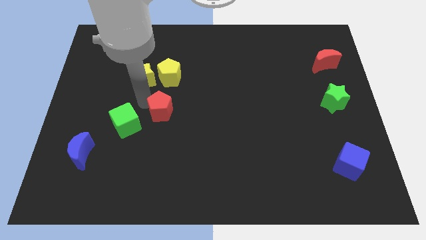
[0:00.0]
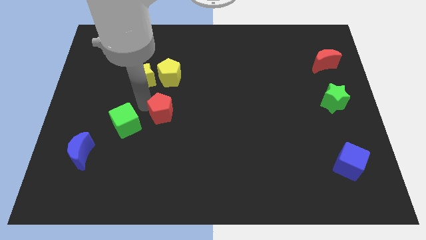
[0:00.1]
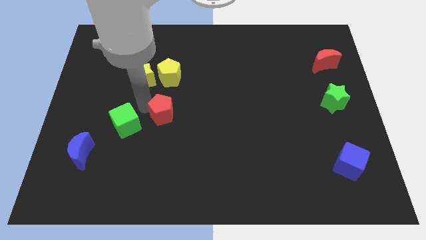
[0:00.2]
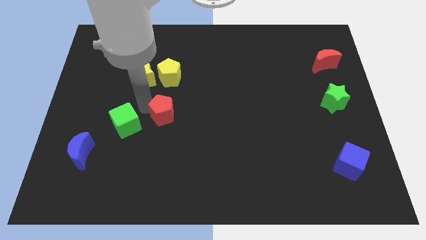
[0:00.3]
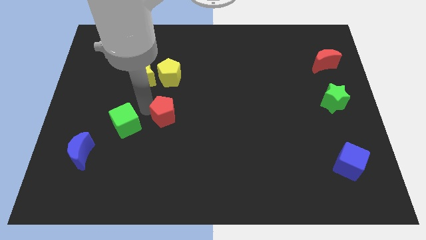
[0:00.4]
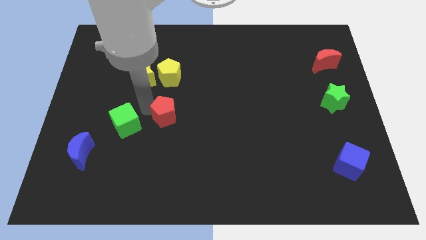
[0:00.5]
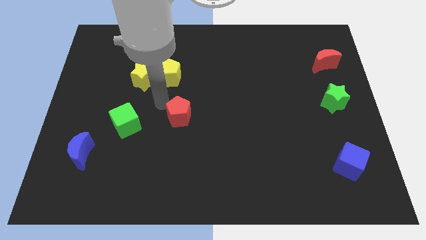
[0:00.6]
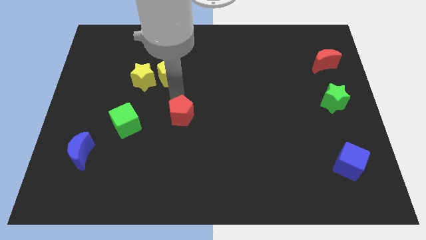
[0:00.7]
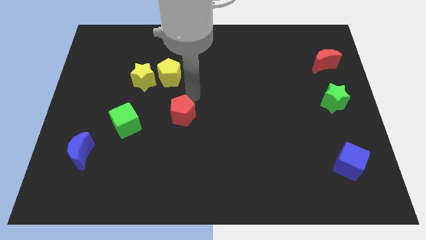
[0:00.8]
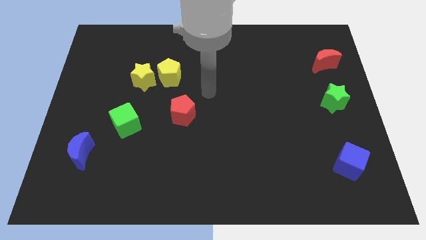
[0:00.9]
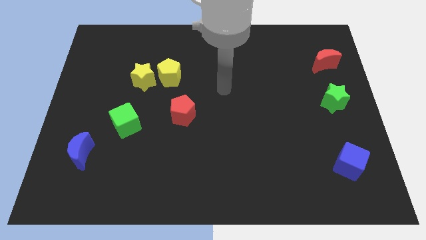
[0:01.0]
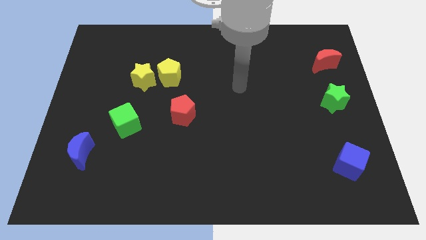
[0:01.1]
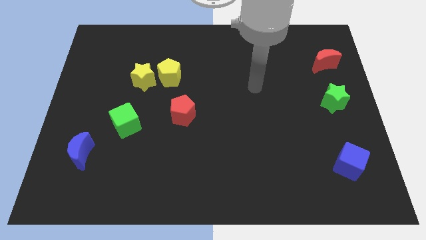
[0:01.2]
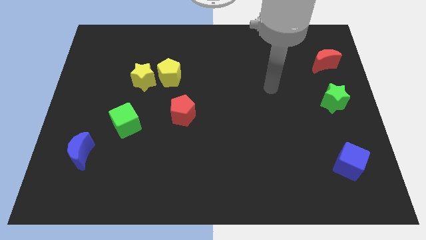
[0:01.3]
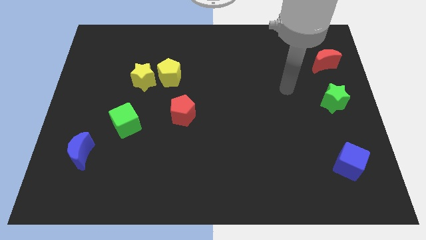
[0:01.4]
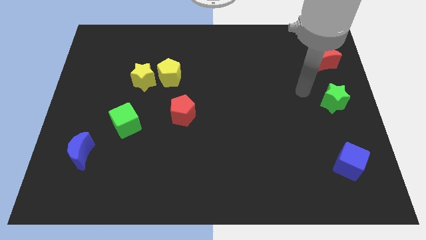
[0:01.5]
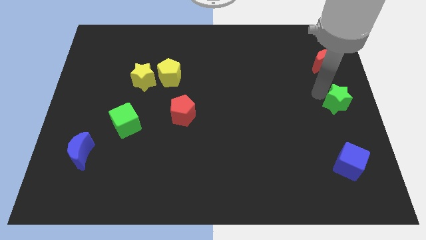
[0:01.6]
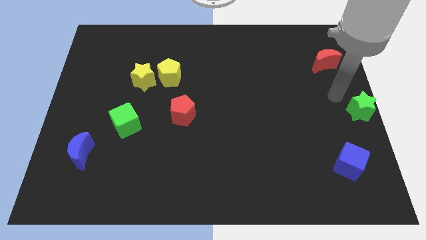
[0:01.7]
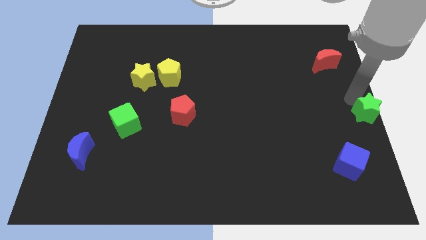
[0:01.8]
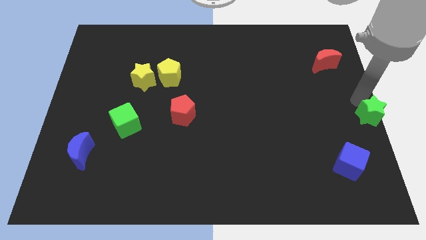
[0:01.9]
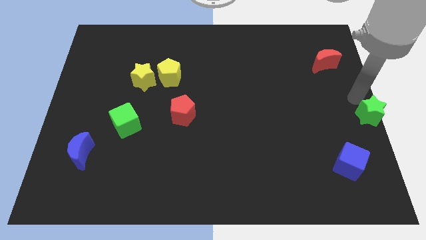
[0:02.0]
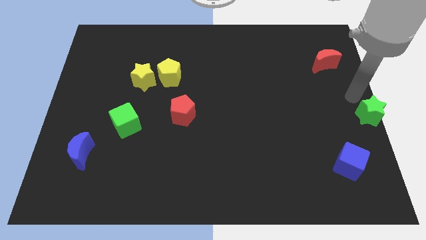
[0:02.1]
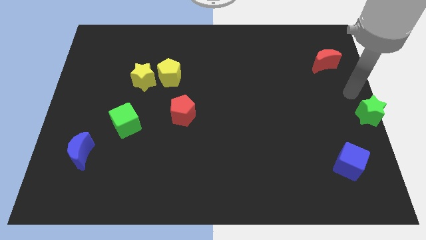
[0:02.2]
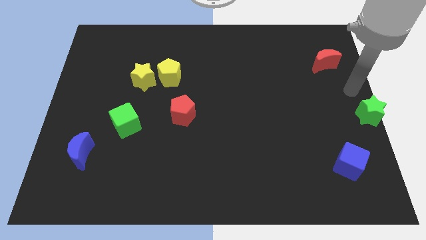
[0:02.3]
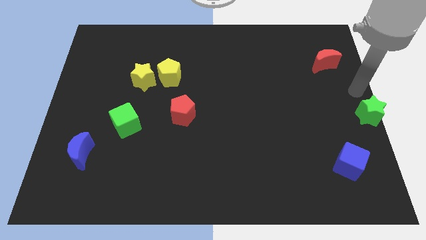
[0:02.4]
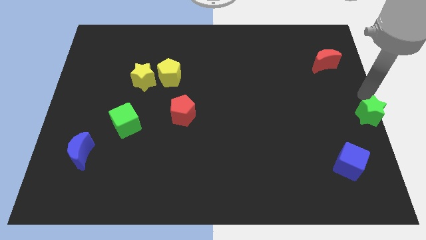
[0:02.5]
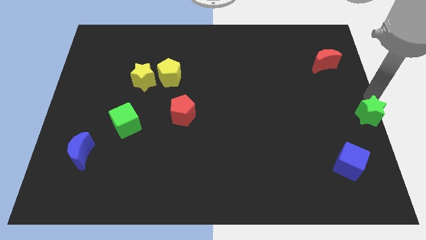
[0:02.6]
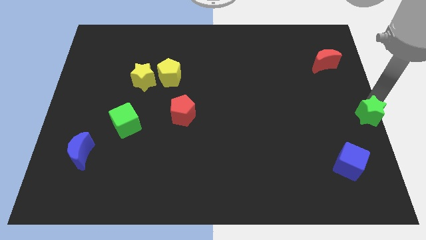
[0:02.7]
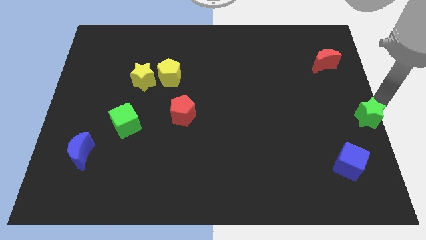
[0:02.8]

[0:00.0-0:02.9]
move your arm close to the green star

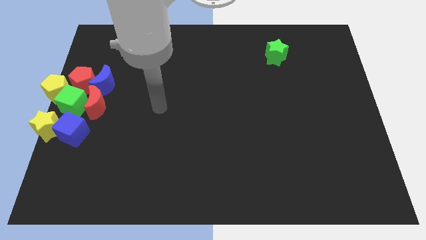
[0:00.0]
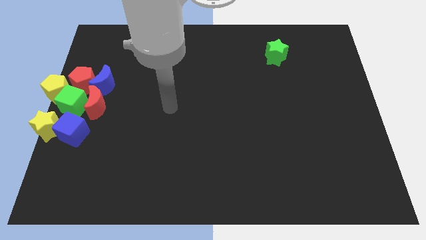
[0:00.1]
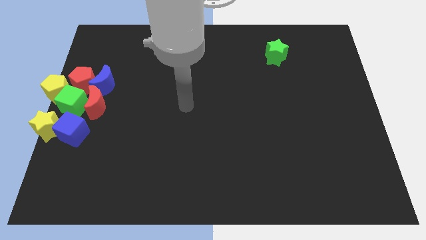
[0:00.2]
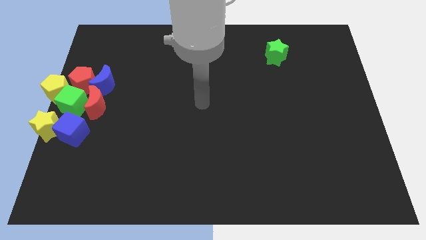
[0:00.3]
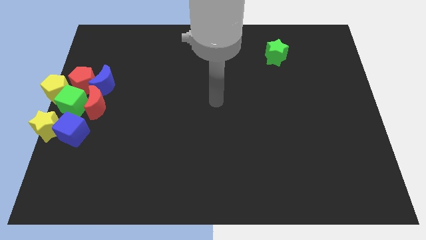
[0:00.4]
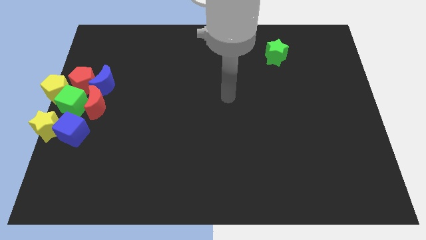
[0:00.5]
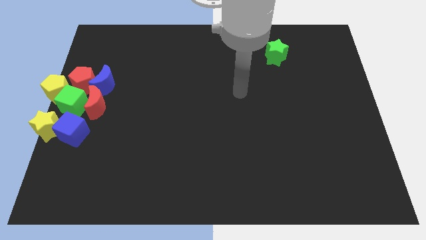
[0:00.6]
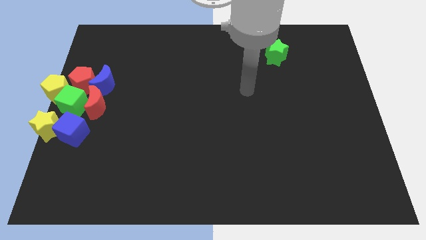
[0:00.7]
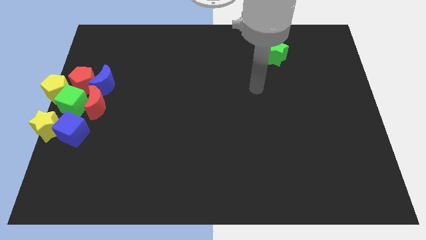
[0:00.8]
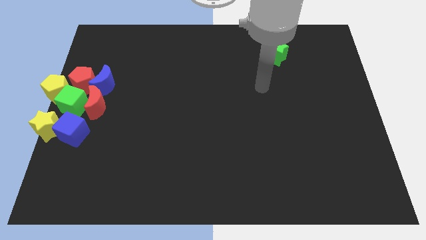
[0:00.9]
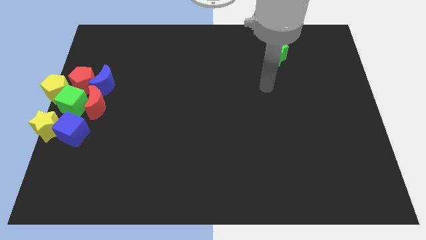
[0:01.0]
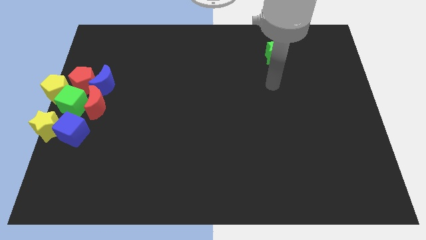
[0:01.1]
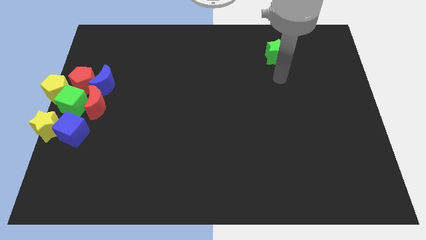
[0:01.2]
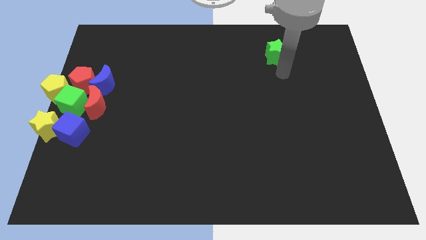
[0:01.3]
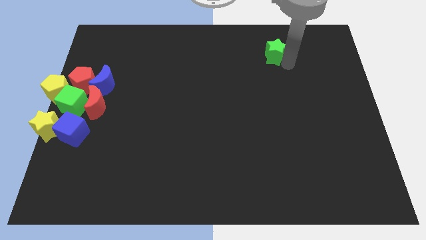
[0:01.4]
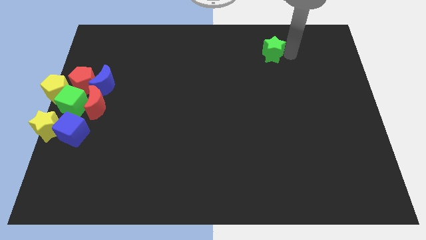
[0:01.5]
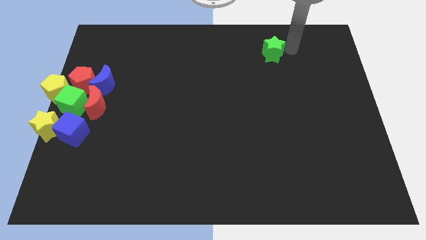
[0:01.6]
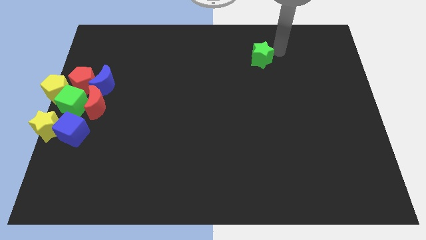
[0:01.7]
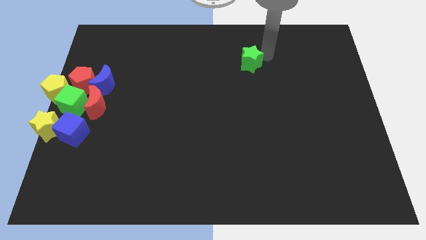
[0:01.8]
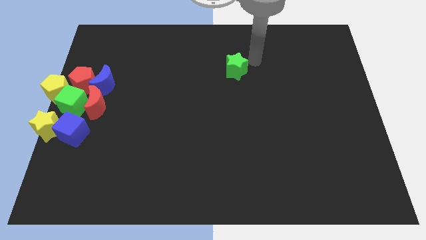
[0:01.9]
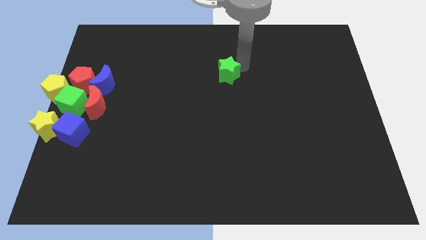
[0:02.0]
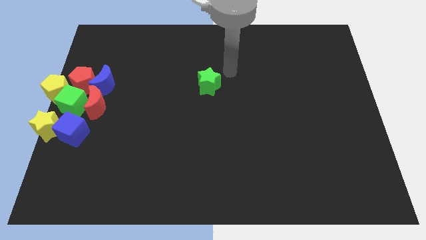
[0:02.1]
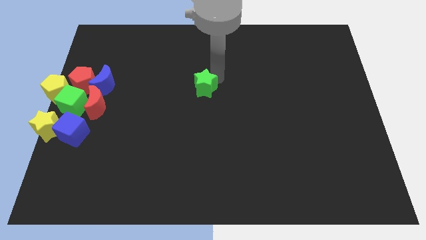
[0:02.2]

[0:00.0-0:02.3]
move the green star to the center of the board

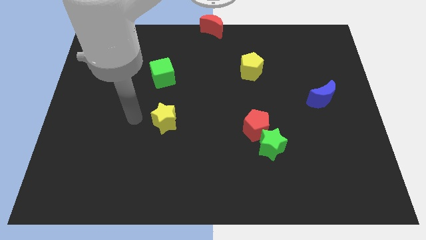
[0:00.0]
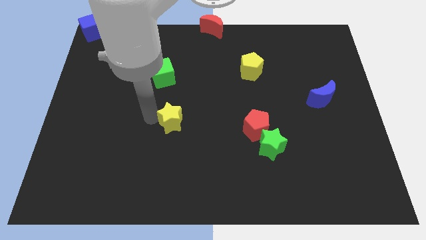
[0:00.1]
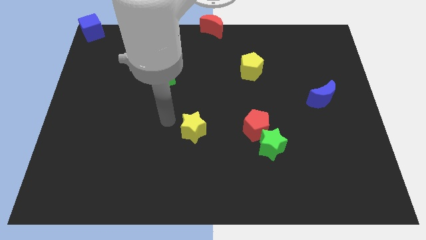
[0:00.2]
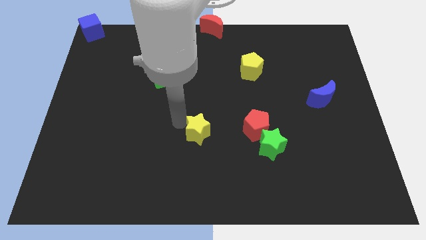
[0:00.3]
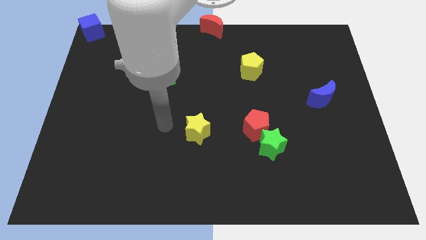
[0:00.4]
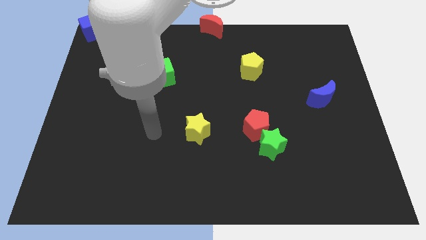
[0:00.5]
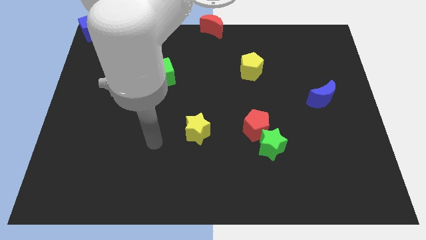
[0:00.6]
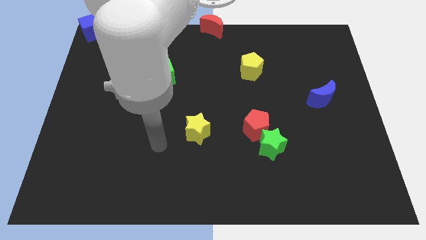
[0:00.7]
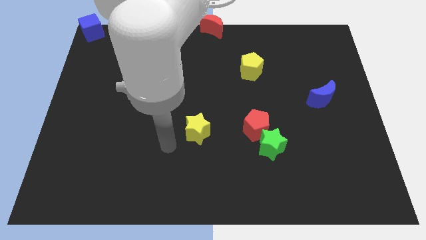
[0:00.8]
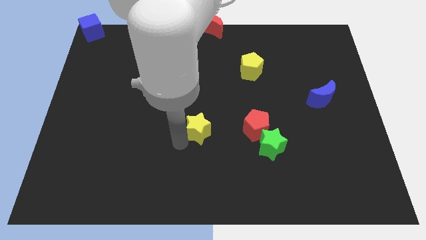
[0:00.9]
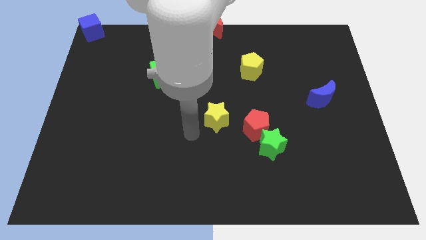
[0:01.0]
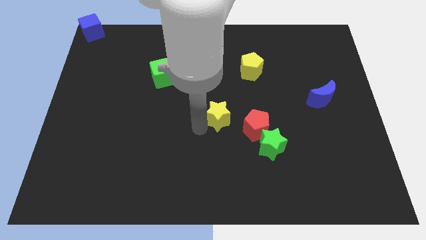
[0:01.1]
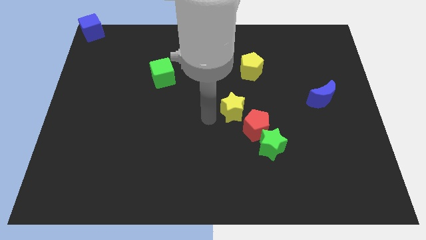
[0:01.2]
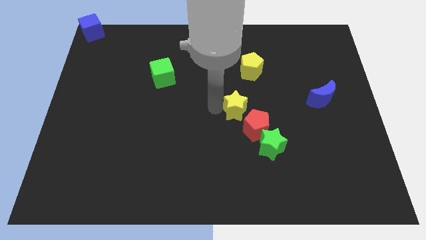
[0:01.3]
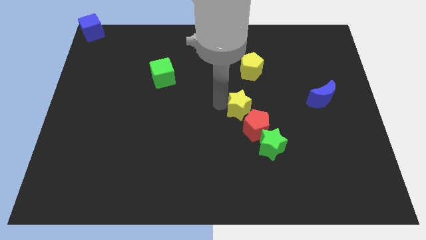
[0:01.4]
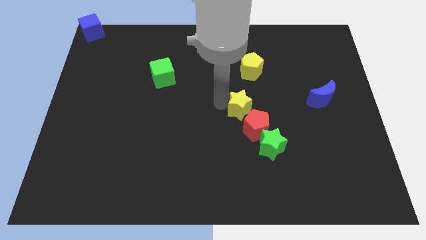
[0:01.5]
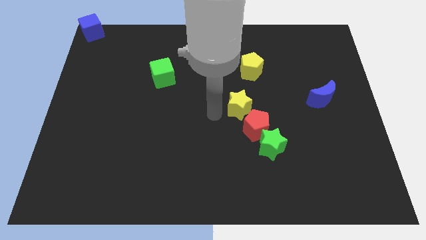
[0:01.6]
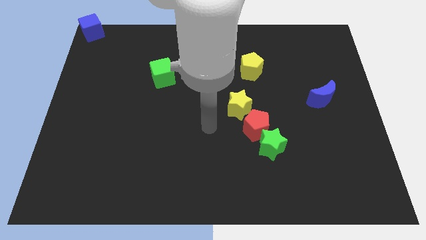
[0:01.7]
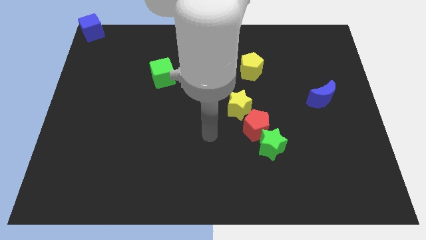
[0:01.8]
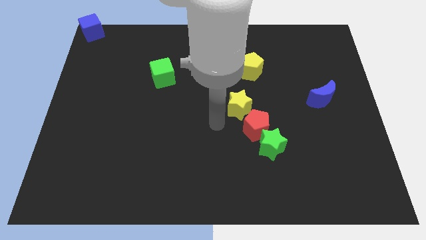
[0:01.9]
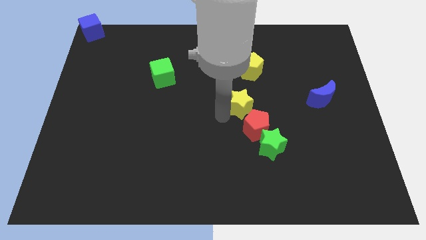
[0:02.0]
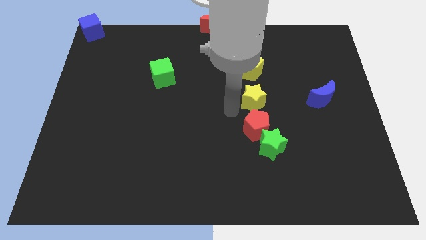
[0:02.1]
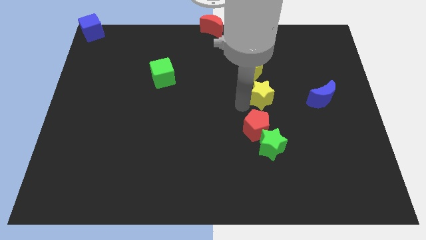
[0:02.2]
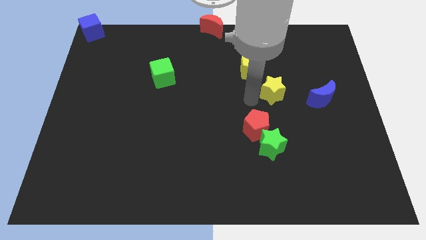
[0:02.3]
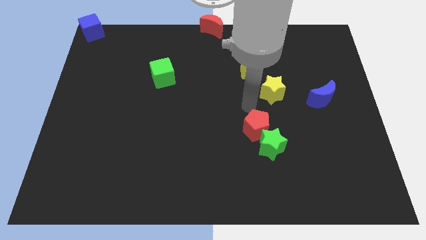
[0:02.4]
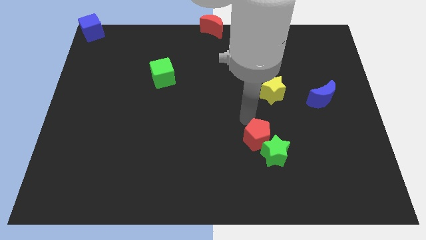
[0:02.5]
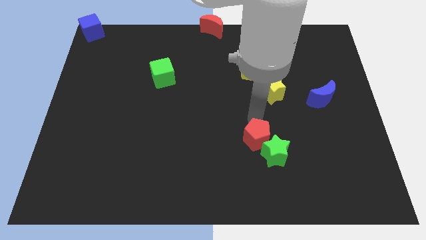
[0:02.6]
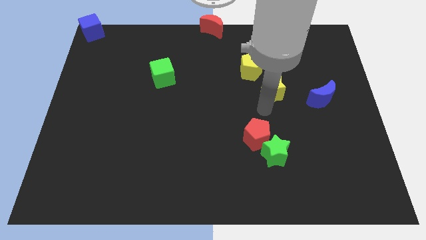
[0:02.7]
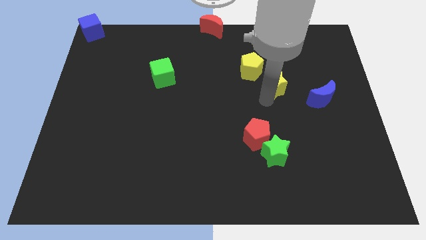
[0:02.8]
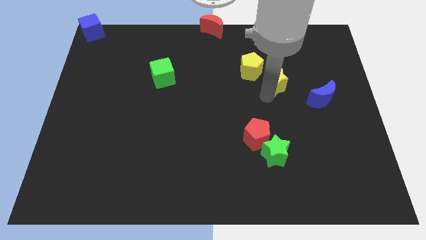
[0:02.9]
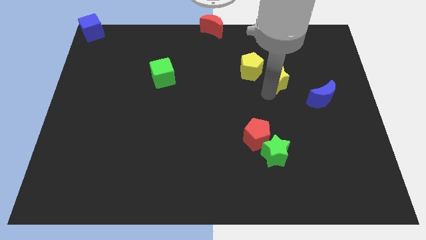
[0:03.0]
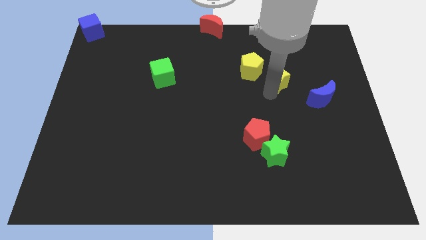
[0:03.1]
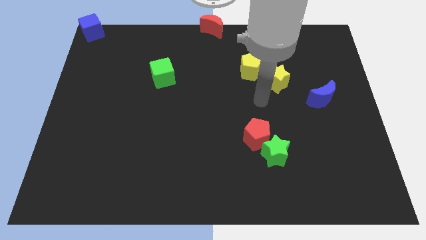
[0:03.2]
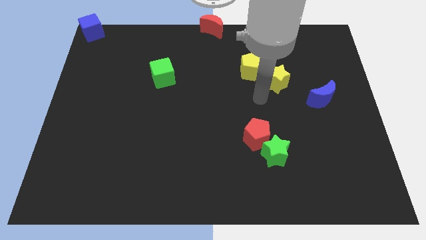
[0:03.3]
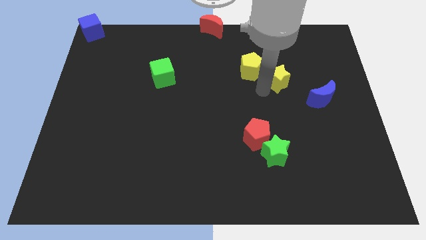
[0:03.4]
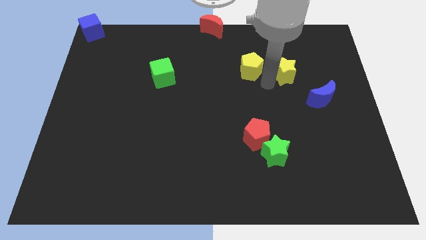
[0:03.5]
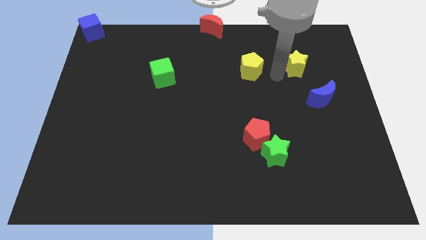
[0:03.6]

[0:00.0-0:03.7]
move the yellow star beside the yellow pentagon
